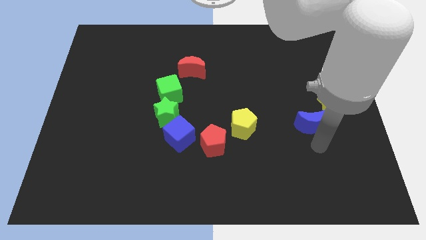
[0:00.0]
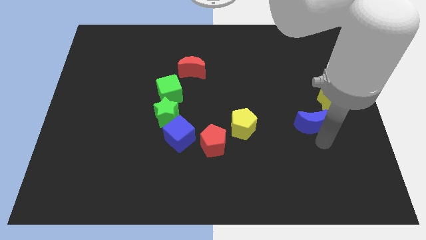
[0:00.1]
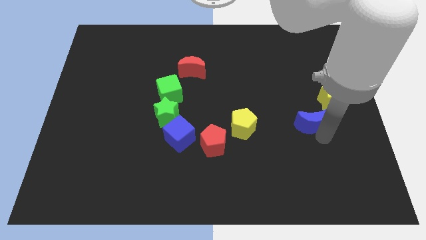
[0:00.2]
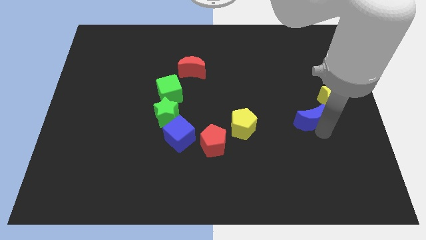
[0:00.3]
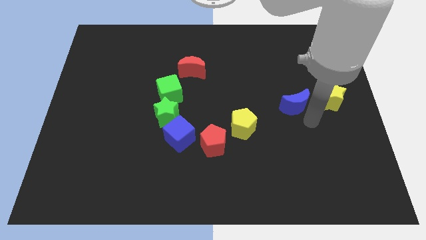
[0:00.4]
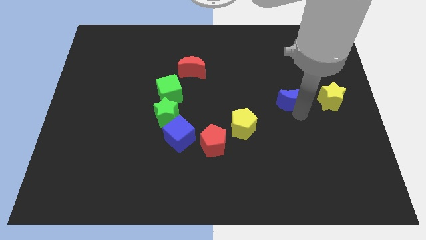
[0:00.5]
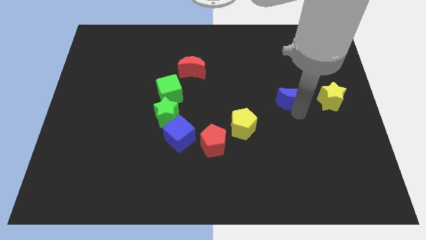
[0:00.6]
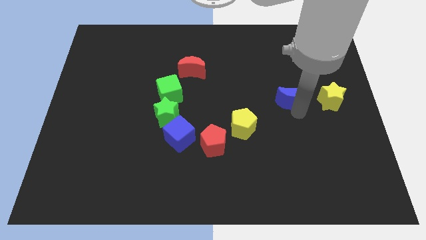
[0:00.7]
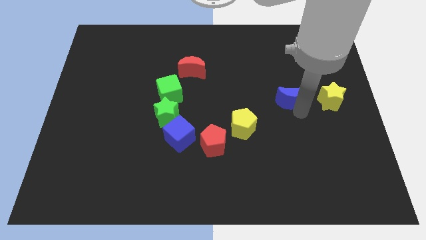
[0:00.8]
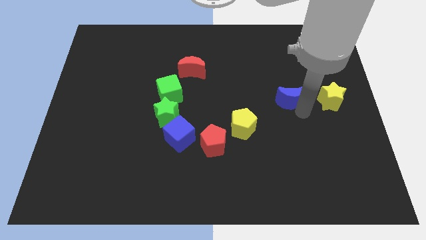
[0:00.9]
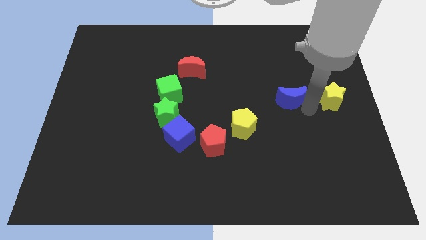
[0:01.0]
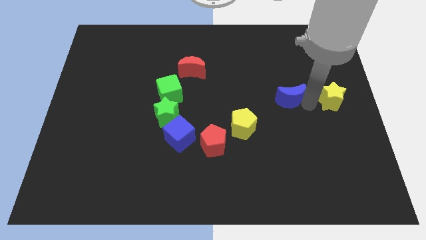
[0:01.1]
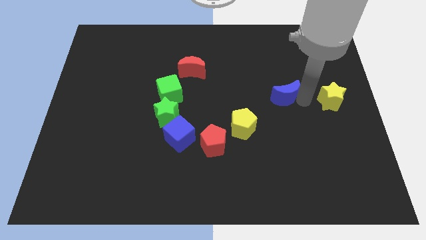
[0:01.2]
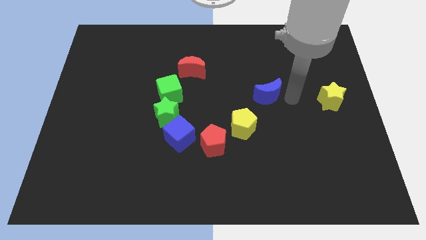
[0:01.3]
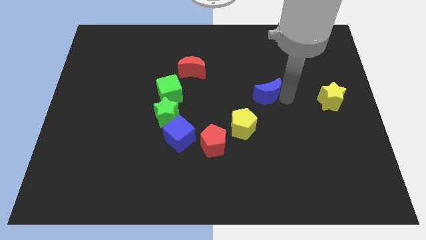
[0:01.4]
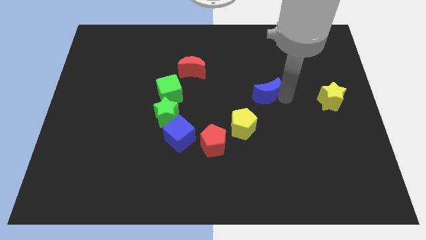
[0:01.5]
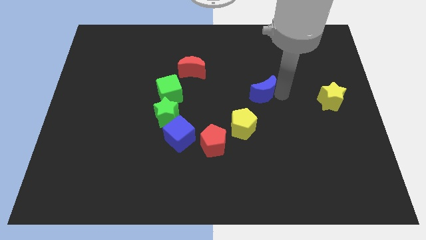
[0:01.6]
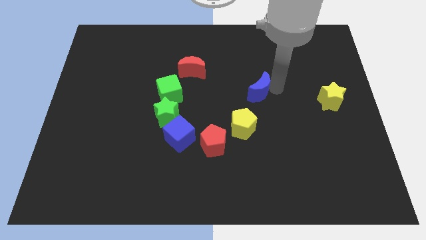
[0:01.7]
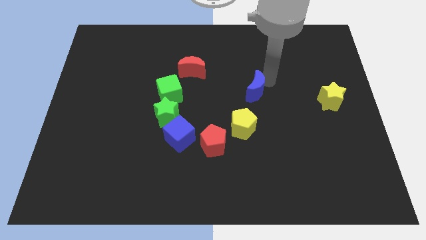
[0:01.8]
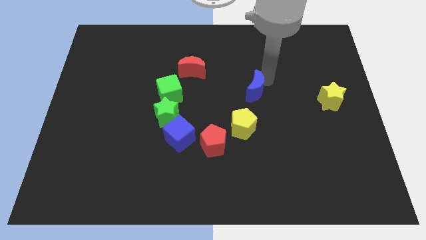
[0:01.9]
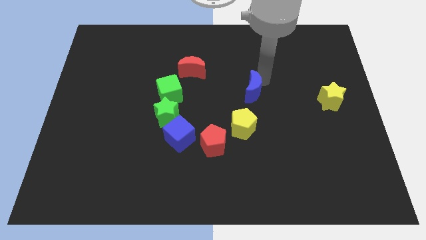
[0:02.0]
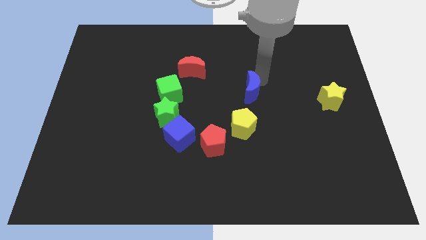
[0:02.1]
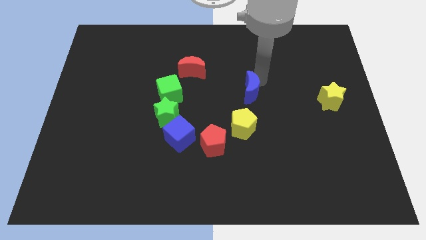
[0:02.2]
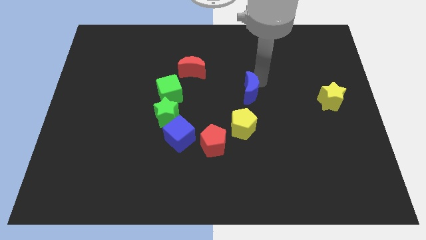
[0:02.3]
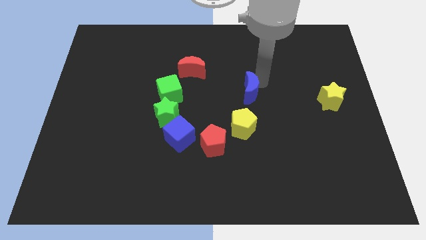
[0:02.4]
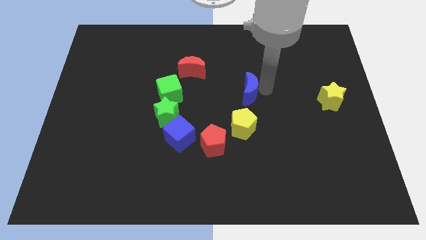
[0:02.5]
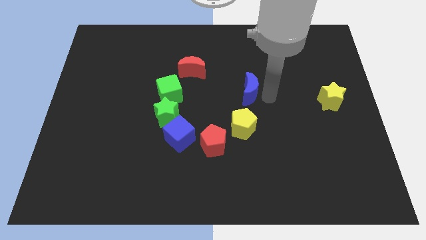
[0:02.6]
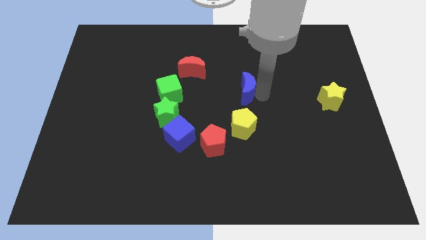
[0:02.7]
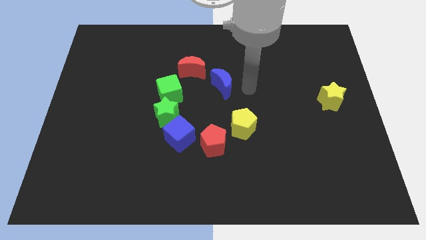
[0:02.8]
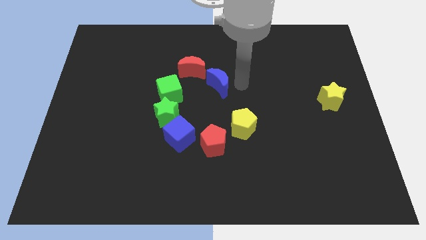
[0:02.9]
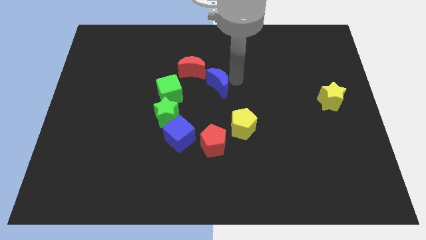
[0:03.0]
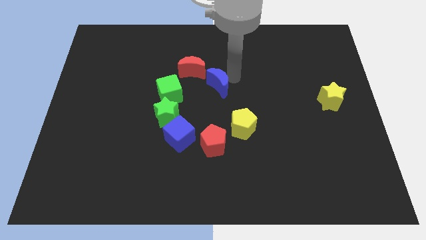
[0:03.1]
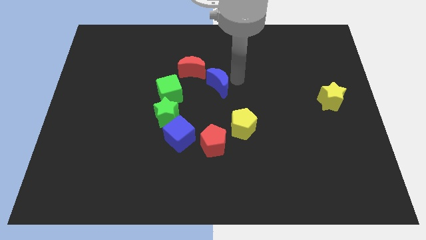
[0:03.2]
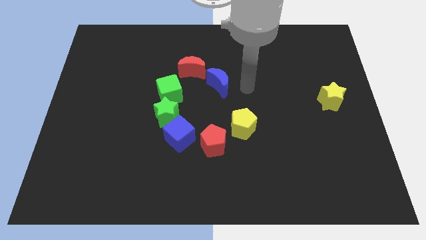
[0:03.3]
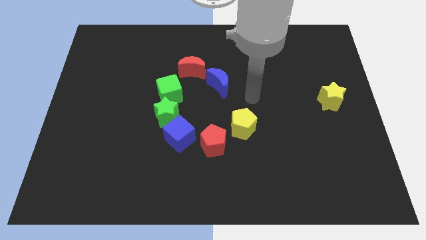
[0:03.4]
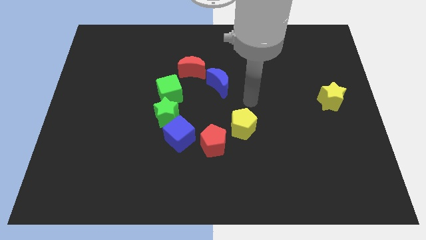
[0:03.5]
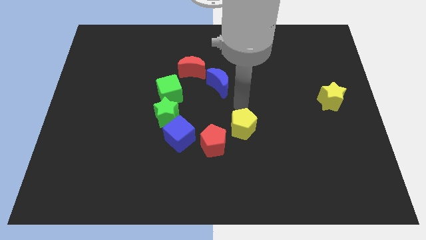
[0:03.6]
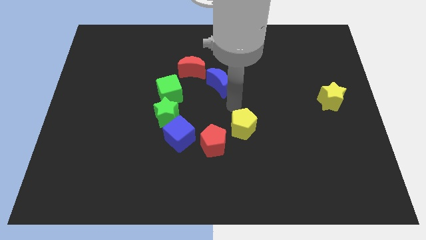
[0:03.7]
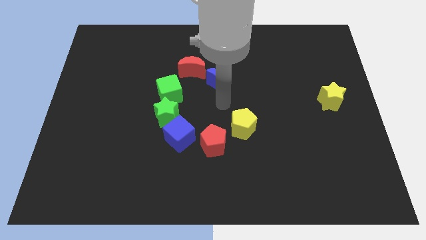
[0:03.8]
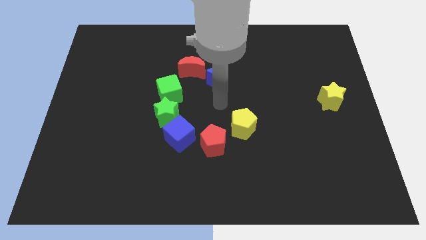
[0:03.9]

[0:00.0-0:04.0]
move blue crescent bottom right to red crescent

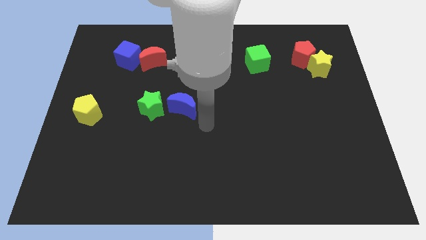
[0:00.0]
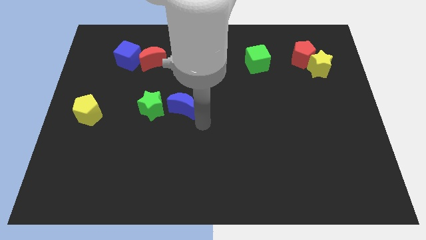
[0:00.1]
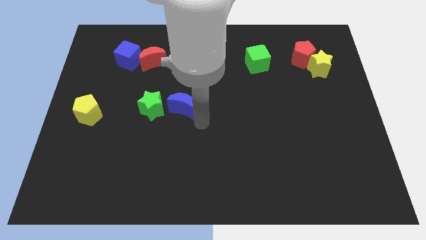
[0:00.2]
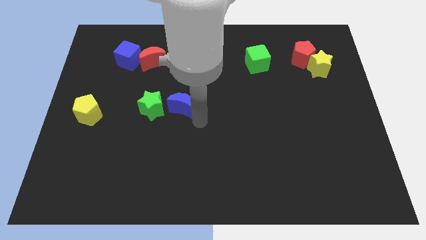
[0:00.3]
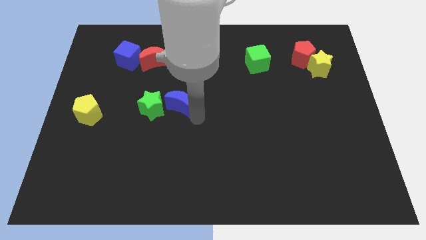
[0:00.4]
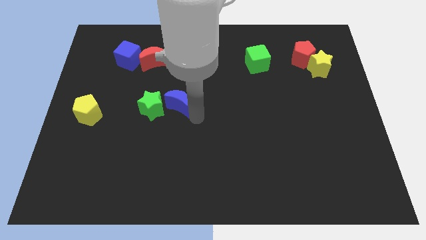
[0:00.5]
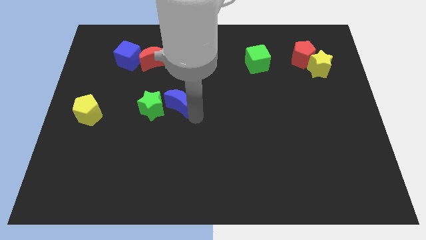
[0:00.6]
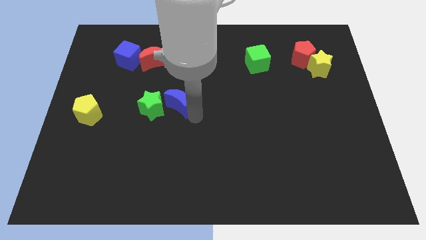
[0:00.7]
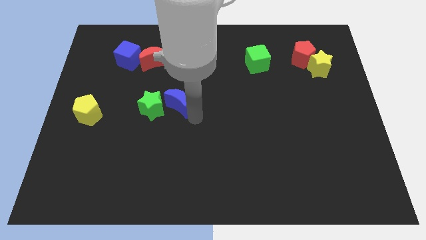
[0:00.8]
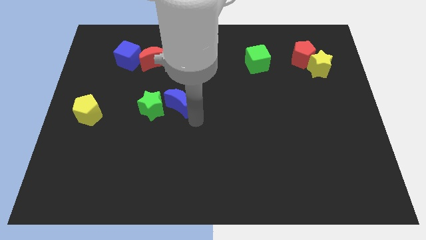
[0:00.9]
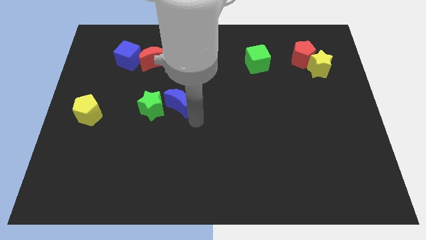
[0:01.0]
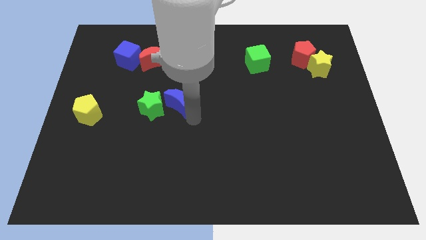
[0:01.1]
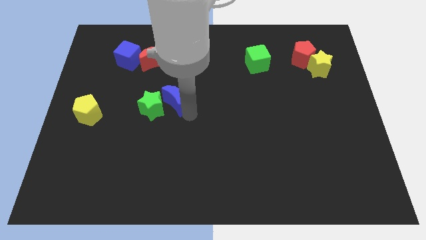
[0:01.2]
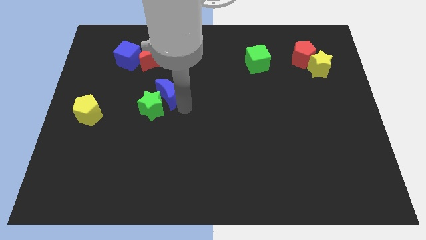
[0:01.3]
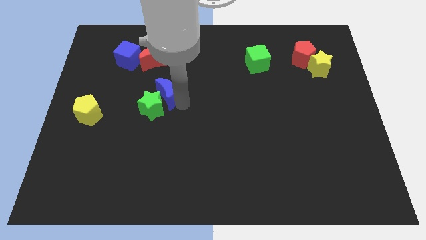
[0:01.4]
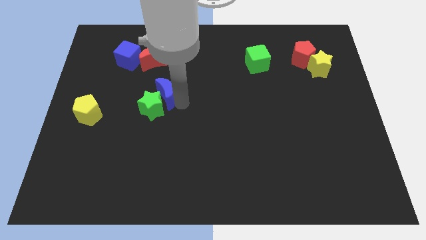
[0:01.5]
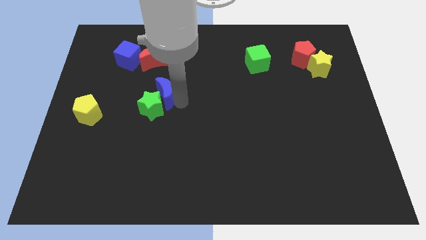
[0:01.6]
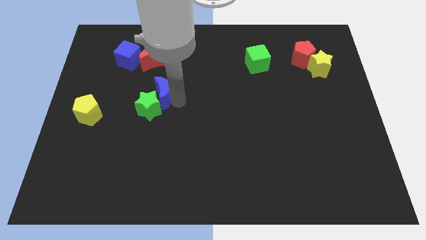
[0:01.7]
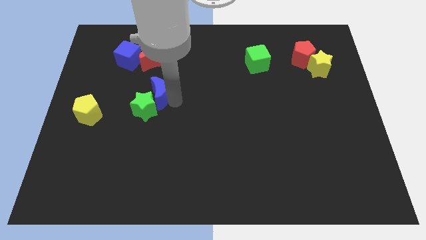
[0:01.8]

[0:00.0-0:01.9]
put the blue moon diagonally top right to the green star

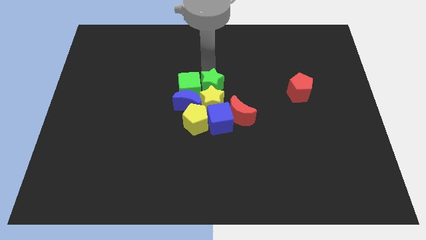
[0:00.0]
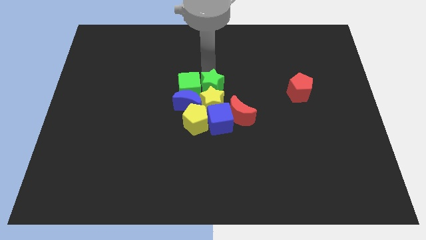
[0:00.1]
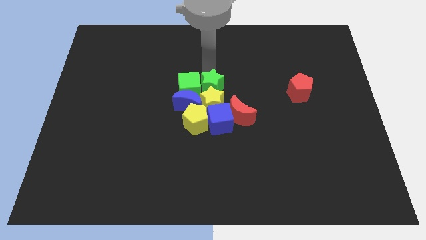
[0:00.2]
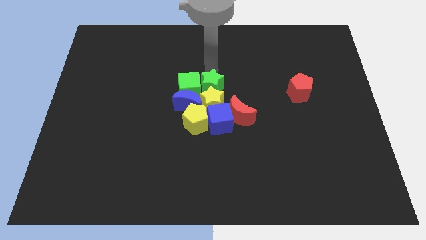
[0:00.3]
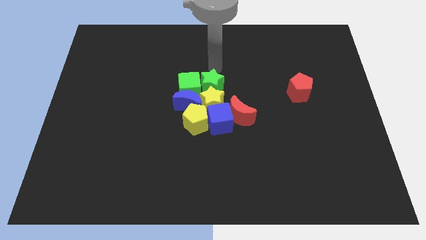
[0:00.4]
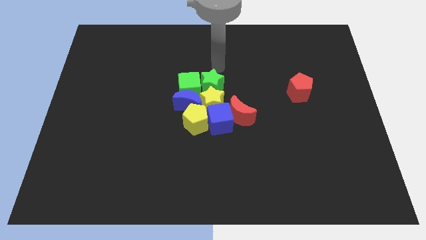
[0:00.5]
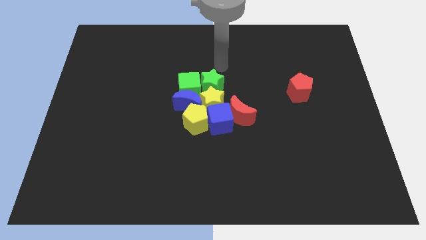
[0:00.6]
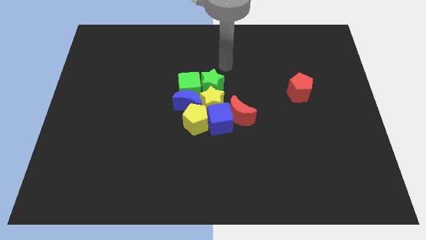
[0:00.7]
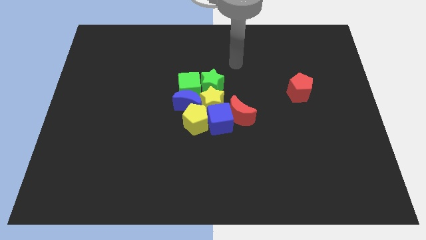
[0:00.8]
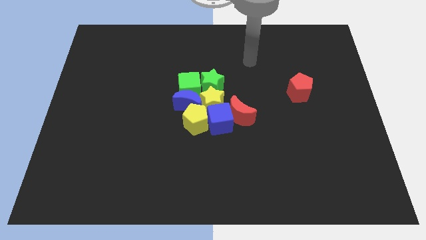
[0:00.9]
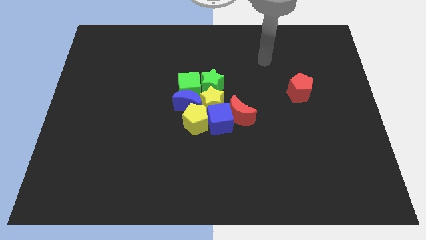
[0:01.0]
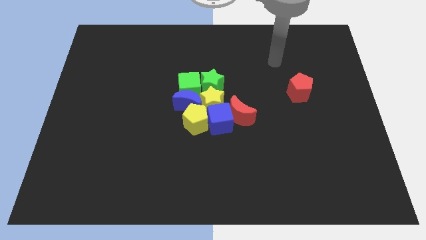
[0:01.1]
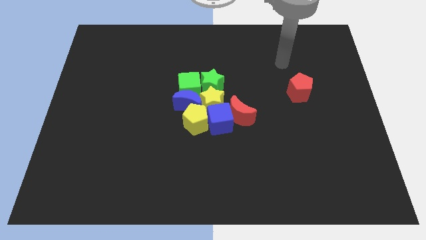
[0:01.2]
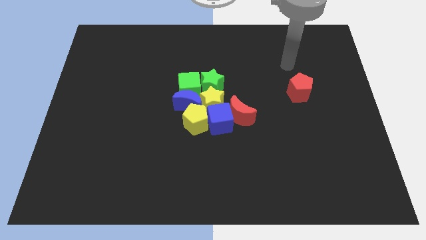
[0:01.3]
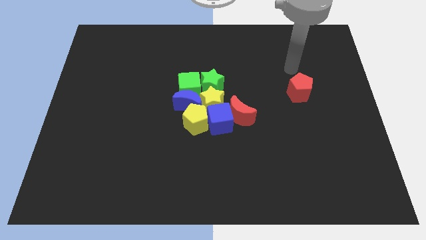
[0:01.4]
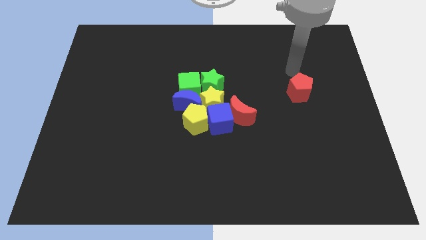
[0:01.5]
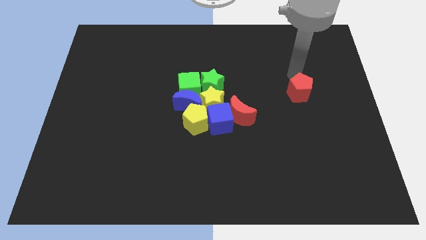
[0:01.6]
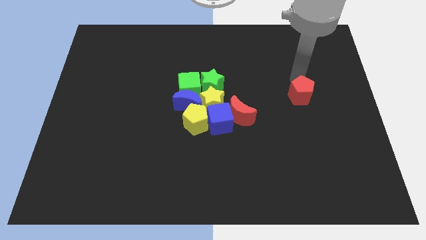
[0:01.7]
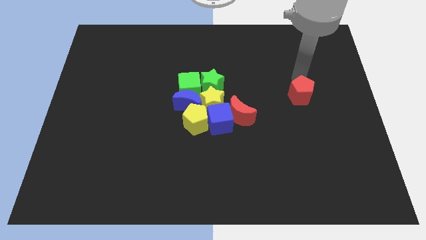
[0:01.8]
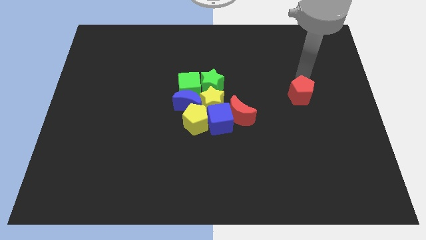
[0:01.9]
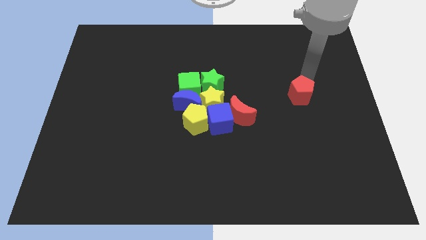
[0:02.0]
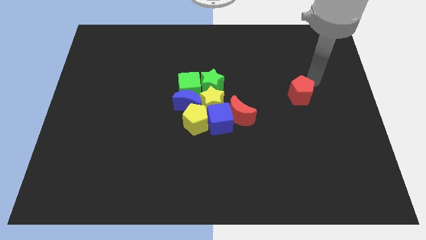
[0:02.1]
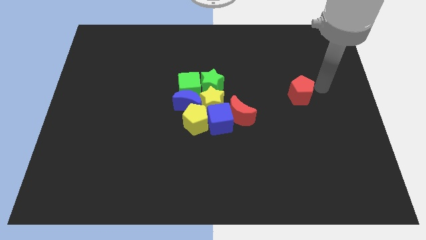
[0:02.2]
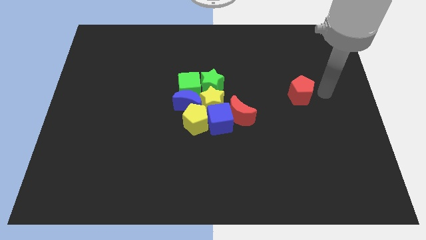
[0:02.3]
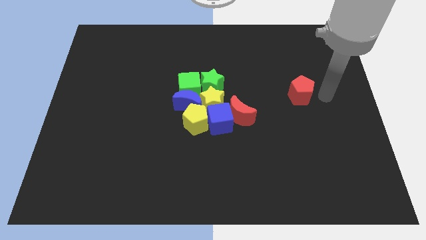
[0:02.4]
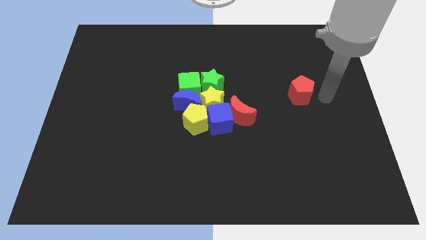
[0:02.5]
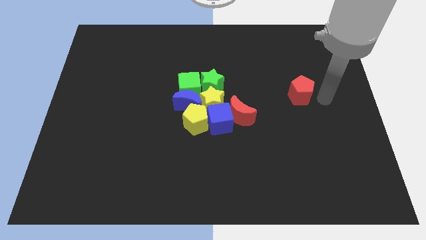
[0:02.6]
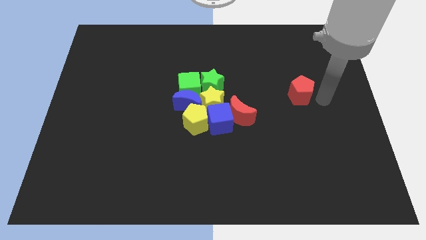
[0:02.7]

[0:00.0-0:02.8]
place the arm right to the red pentagon

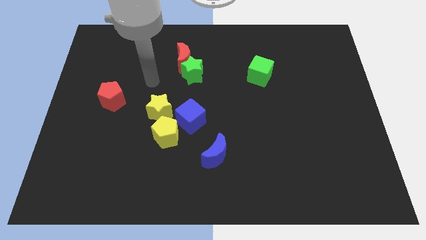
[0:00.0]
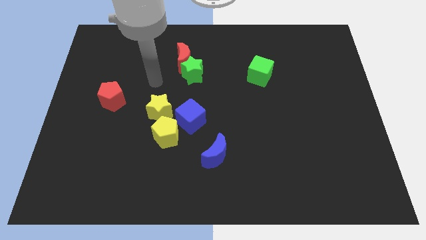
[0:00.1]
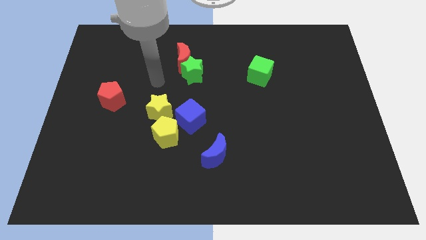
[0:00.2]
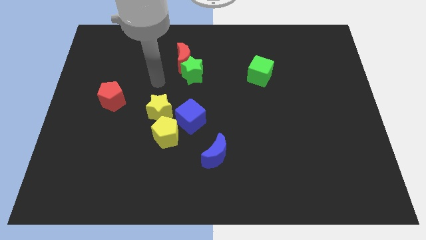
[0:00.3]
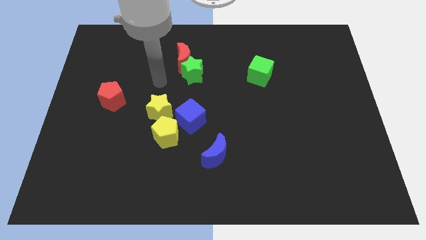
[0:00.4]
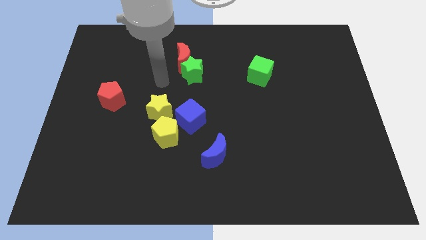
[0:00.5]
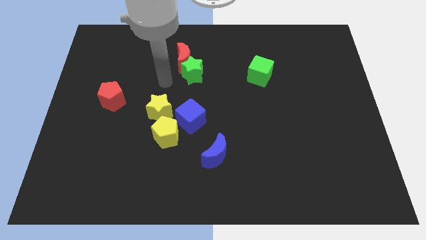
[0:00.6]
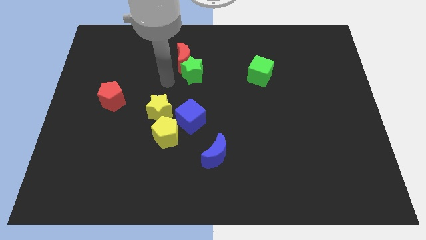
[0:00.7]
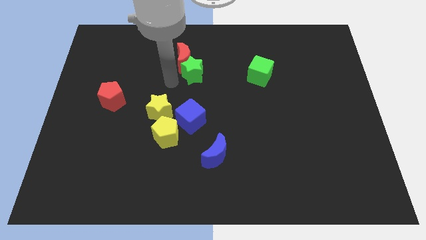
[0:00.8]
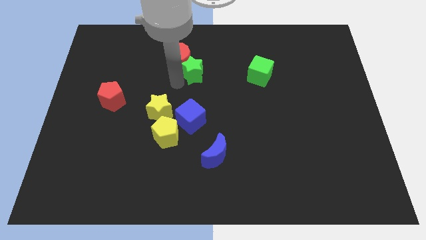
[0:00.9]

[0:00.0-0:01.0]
move the arm to the bottom left of green star
